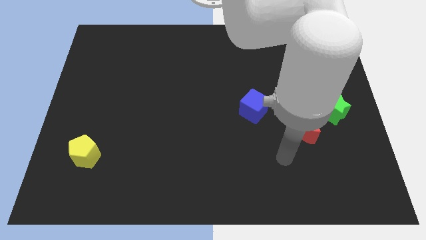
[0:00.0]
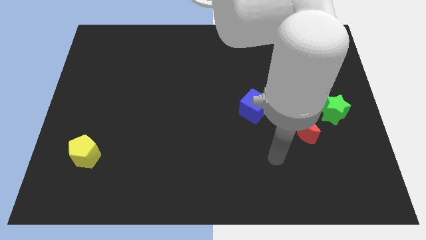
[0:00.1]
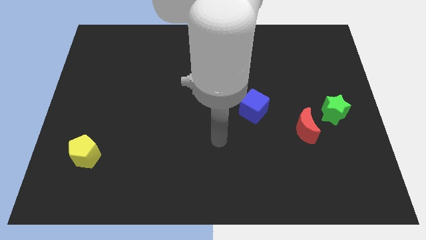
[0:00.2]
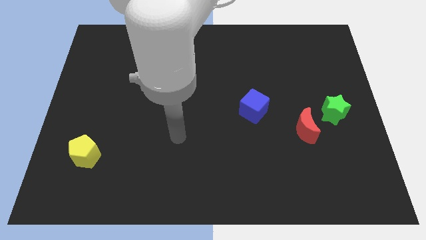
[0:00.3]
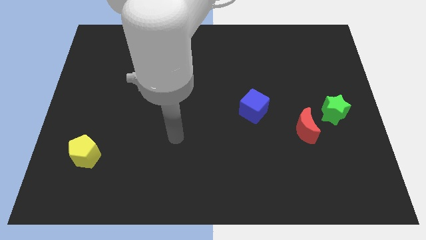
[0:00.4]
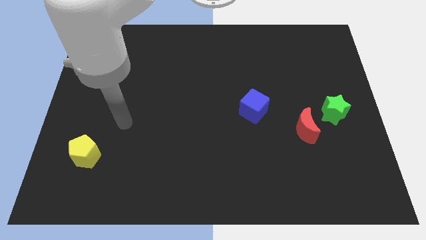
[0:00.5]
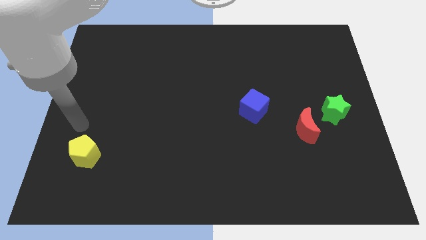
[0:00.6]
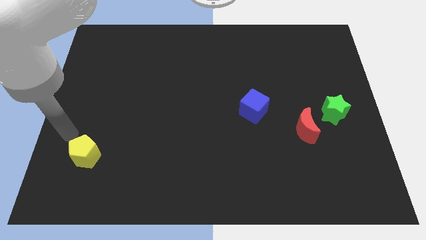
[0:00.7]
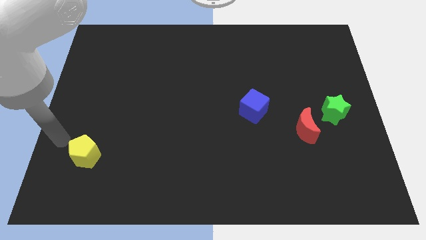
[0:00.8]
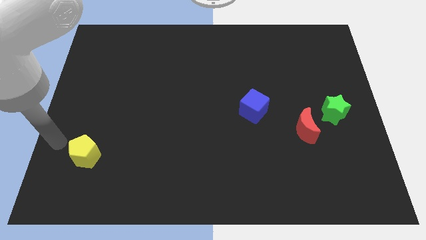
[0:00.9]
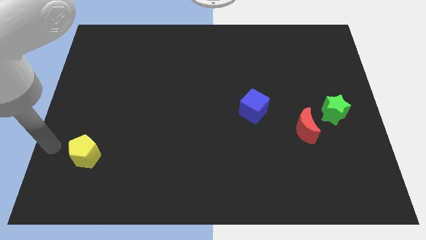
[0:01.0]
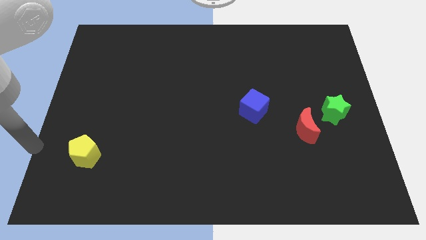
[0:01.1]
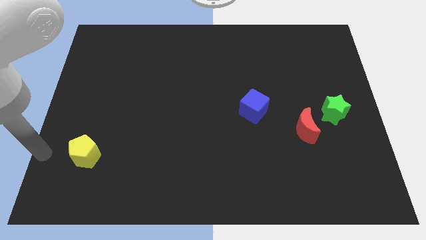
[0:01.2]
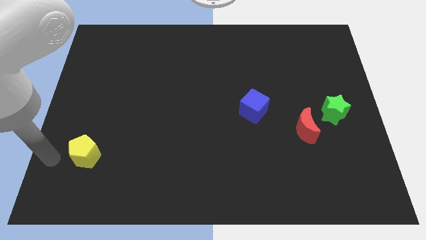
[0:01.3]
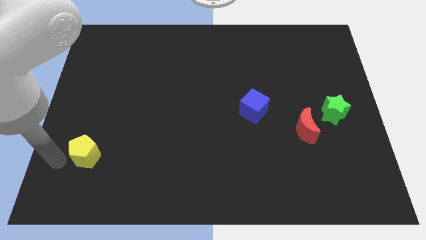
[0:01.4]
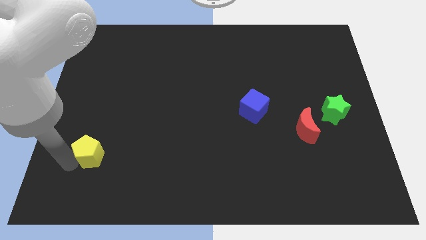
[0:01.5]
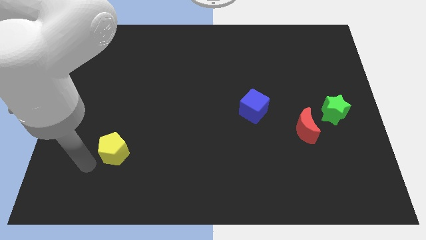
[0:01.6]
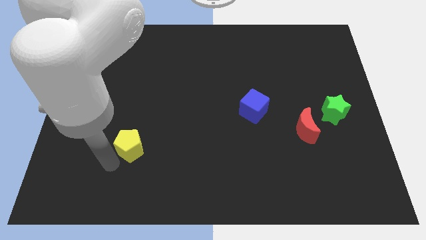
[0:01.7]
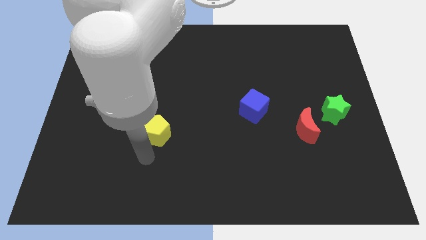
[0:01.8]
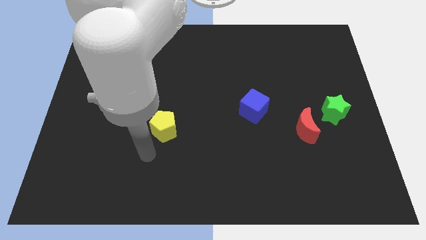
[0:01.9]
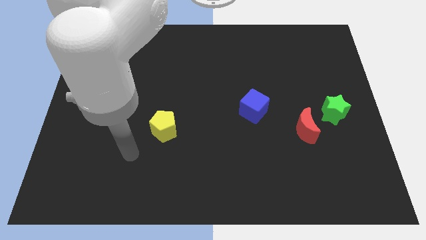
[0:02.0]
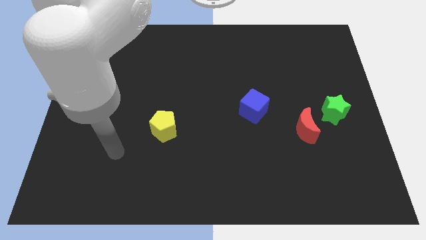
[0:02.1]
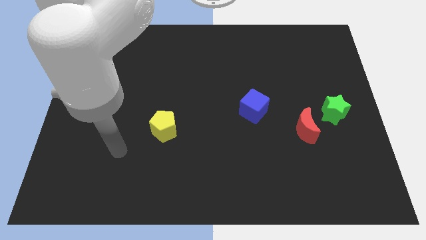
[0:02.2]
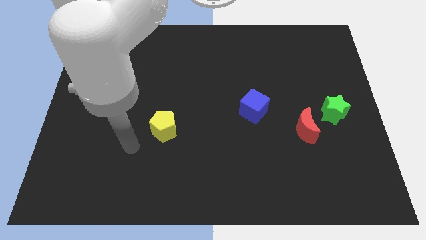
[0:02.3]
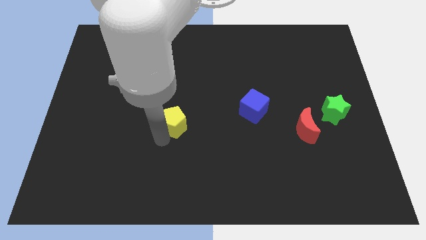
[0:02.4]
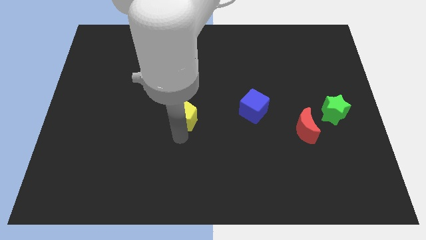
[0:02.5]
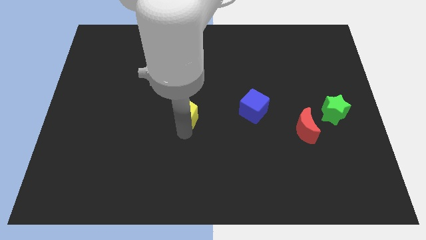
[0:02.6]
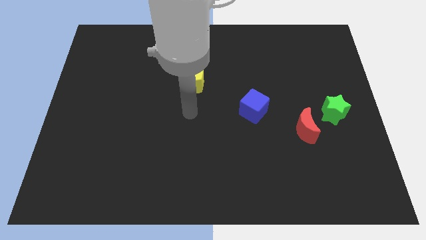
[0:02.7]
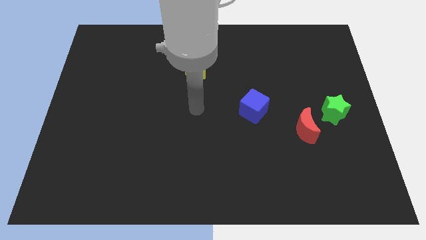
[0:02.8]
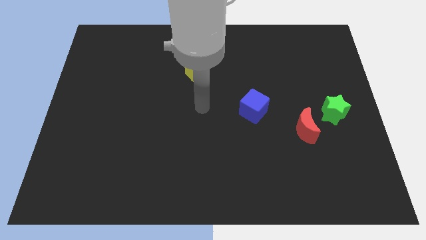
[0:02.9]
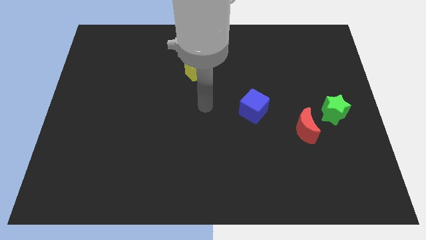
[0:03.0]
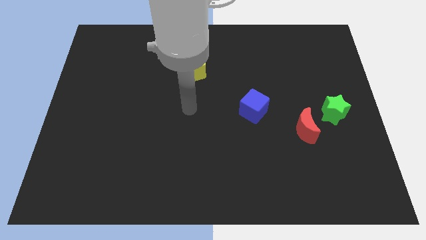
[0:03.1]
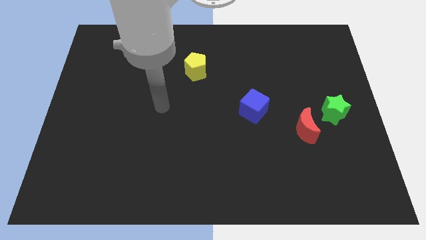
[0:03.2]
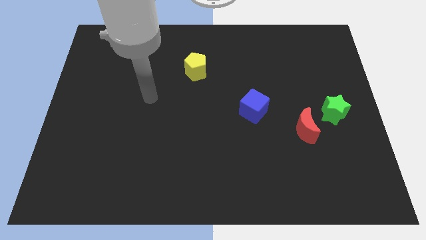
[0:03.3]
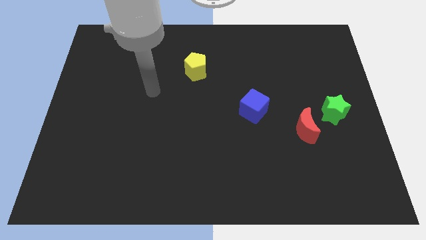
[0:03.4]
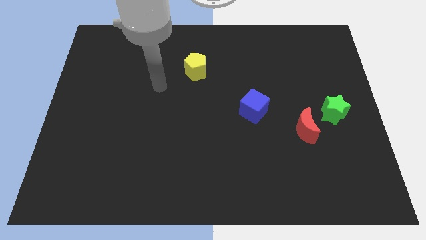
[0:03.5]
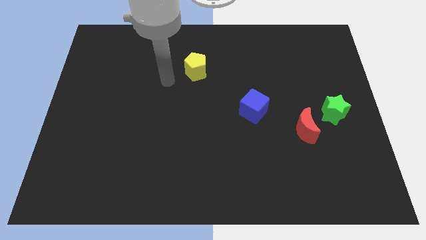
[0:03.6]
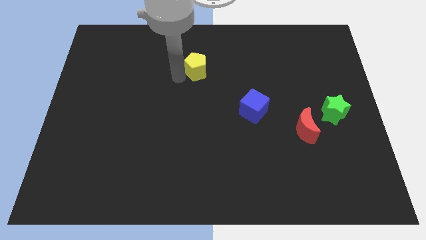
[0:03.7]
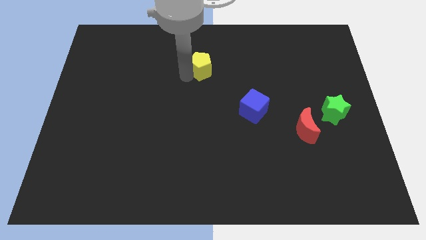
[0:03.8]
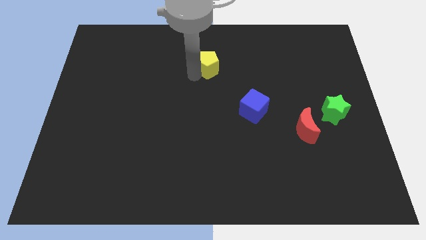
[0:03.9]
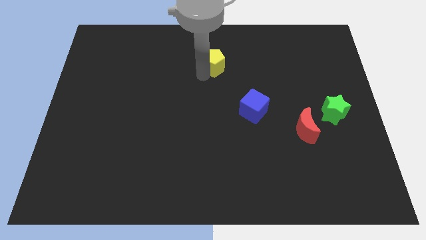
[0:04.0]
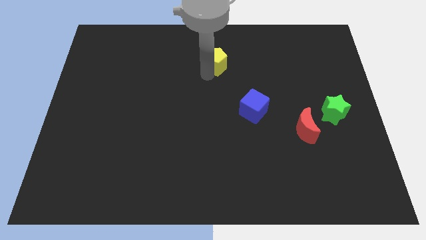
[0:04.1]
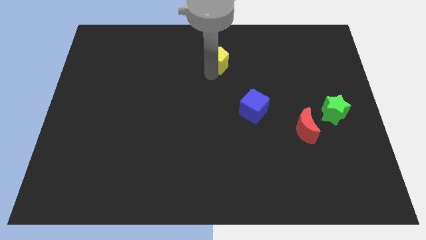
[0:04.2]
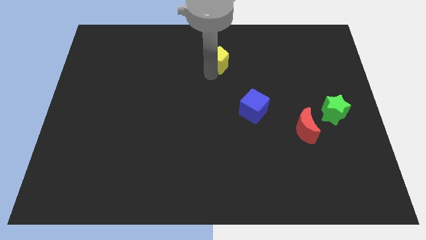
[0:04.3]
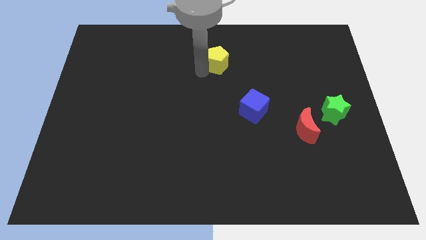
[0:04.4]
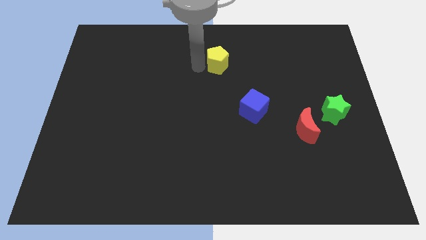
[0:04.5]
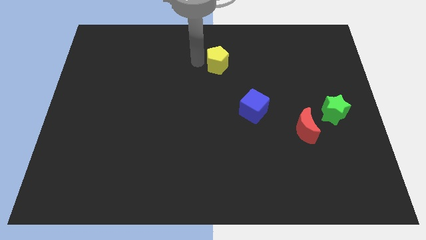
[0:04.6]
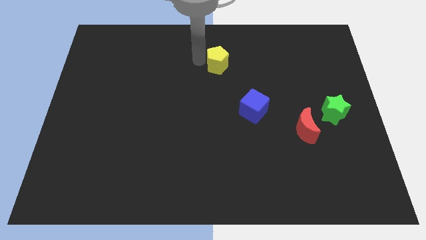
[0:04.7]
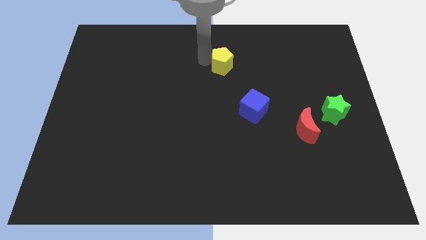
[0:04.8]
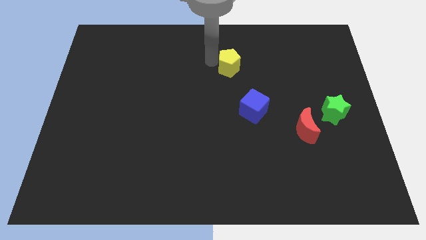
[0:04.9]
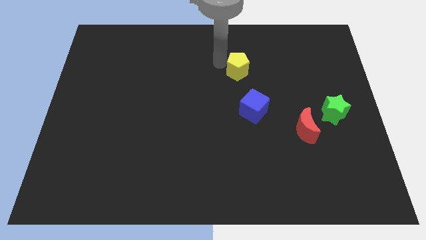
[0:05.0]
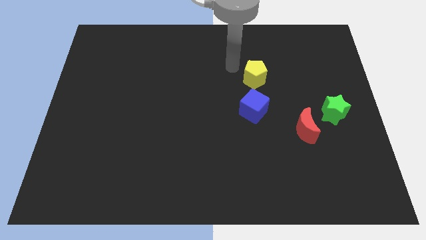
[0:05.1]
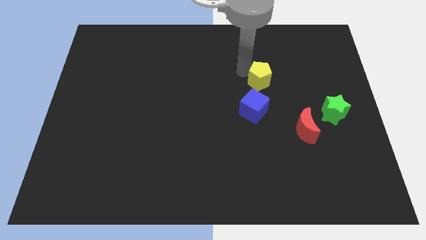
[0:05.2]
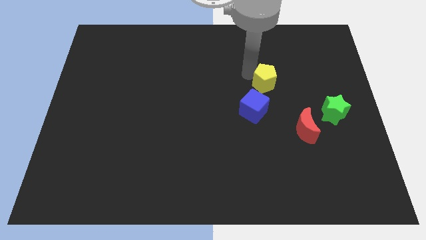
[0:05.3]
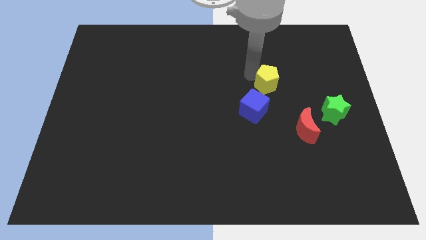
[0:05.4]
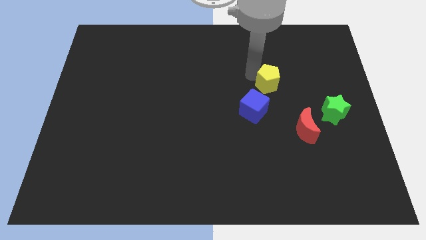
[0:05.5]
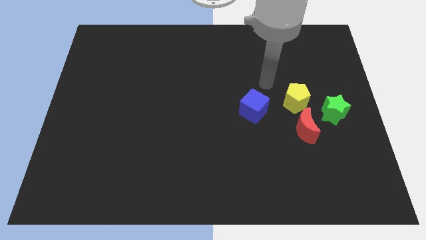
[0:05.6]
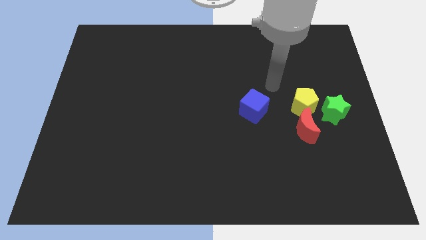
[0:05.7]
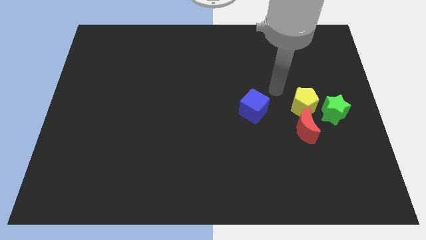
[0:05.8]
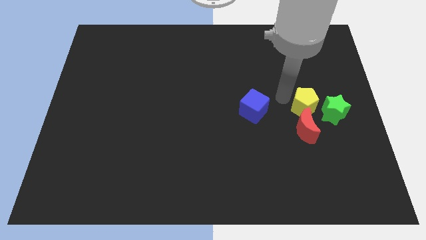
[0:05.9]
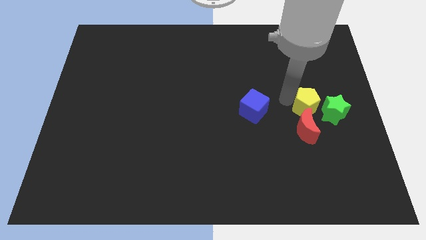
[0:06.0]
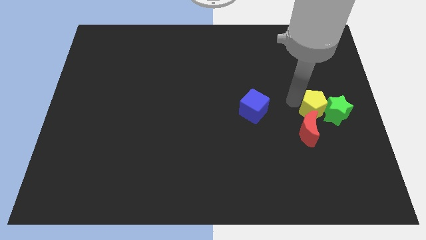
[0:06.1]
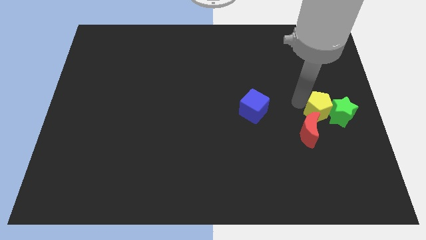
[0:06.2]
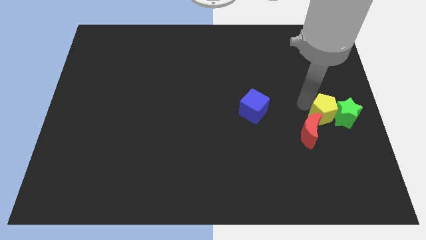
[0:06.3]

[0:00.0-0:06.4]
put the yellow block towards the green block

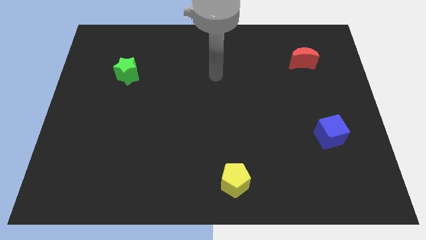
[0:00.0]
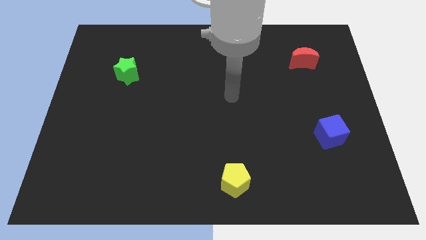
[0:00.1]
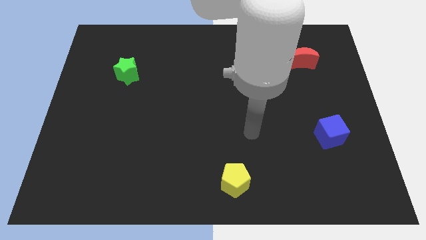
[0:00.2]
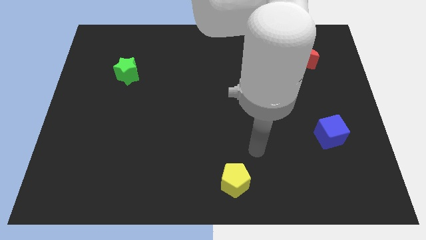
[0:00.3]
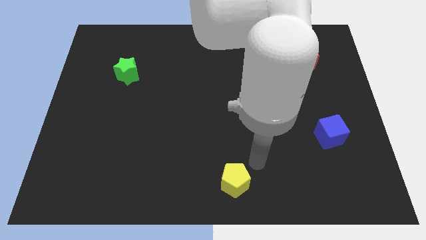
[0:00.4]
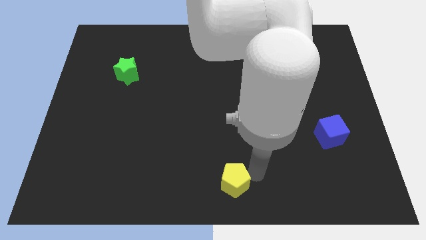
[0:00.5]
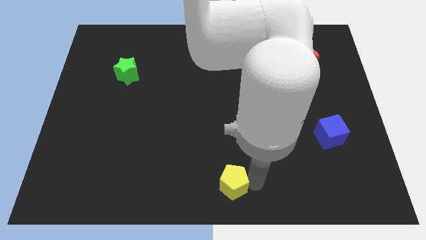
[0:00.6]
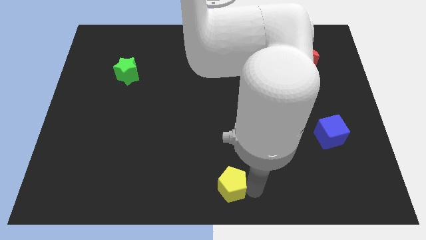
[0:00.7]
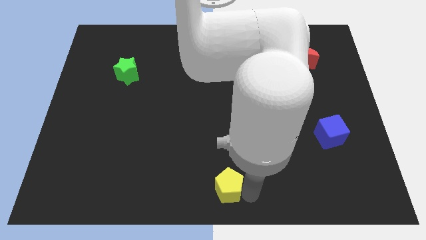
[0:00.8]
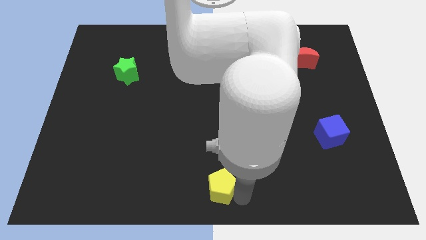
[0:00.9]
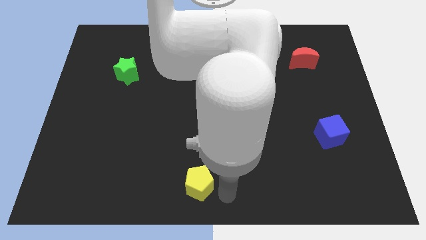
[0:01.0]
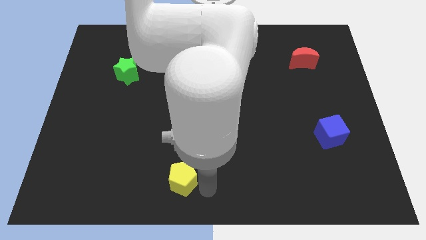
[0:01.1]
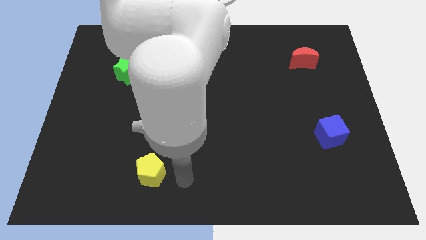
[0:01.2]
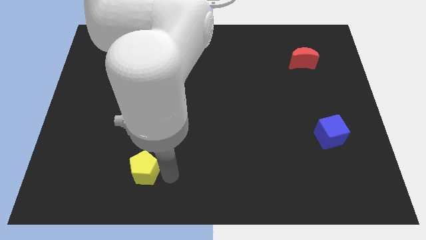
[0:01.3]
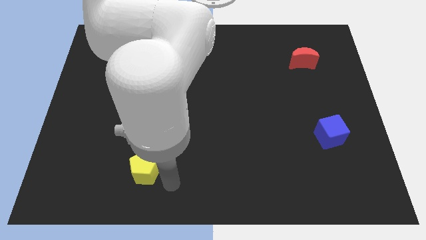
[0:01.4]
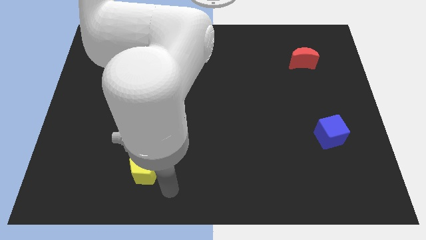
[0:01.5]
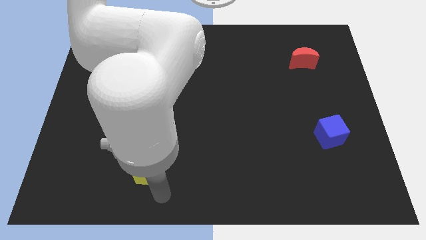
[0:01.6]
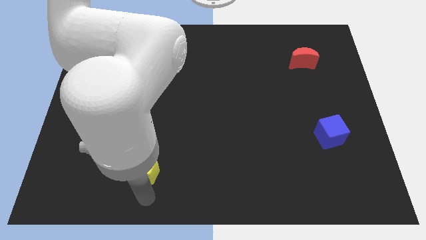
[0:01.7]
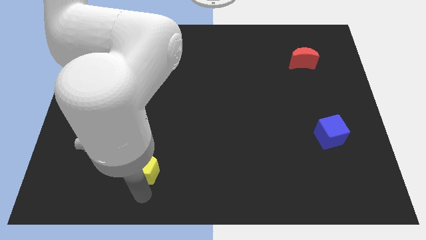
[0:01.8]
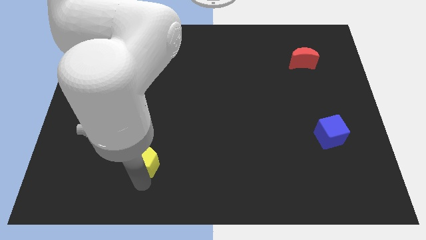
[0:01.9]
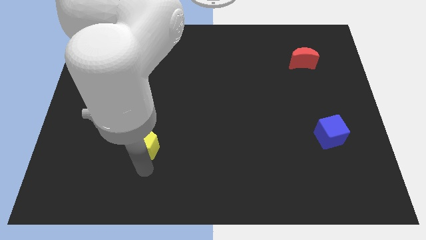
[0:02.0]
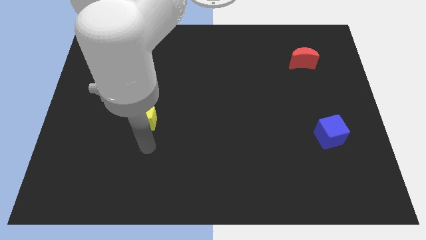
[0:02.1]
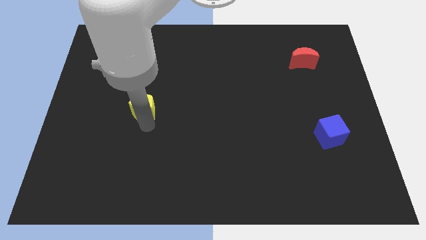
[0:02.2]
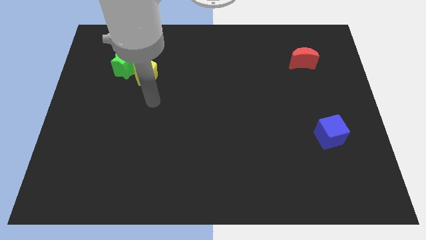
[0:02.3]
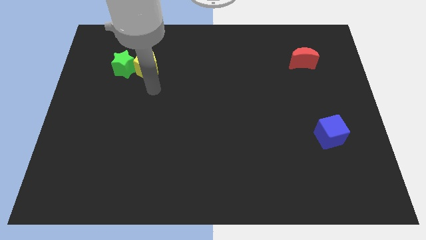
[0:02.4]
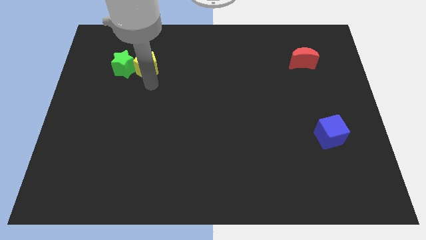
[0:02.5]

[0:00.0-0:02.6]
slide the pentagon close to the green block
